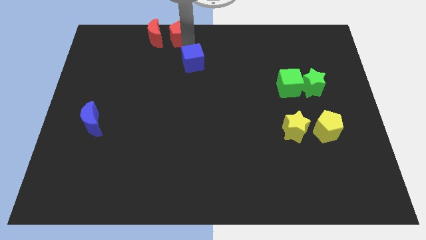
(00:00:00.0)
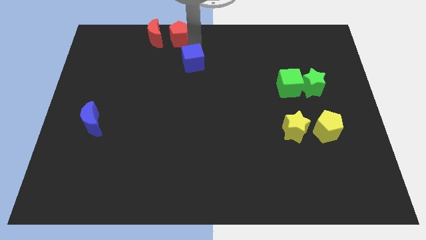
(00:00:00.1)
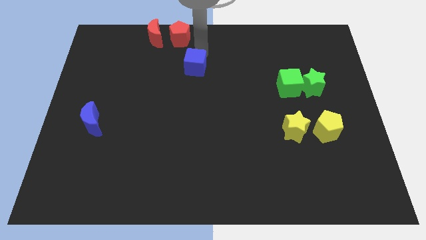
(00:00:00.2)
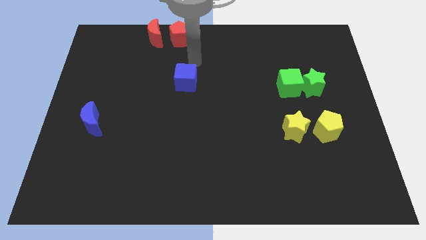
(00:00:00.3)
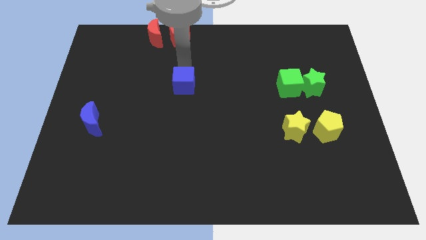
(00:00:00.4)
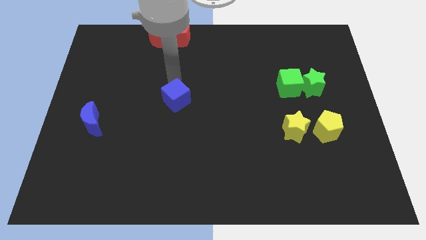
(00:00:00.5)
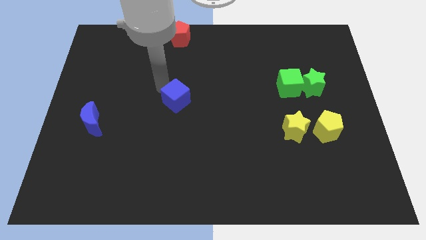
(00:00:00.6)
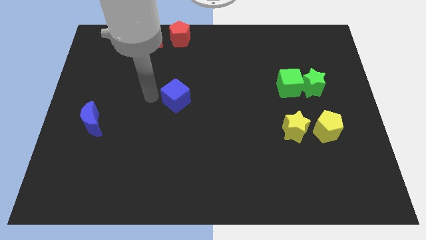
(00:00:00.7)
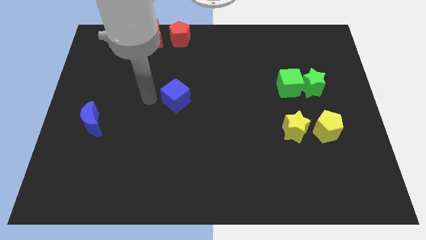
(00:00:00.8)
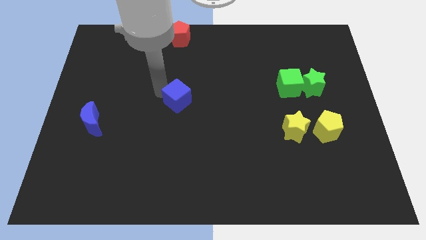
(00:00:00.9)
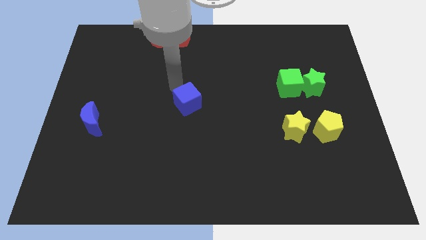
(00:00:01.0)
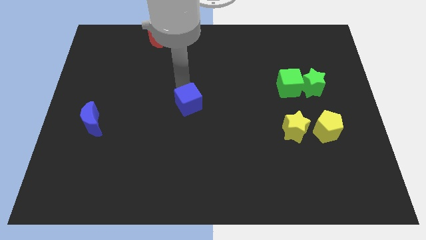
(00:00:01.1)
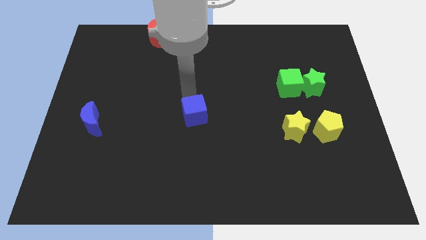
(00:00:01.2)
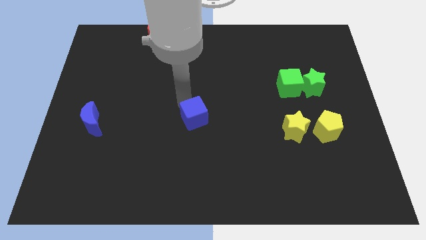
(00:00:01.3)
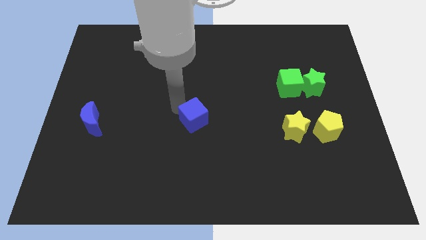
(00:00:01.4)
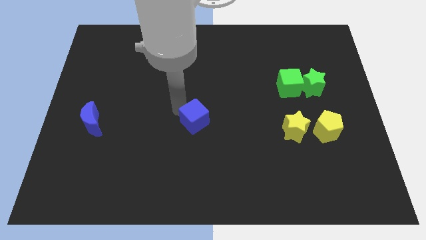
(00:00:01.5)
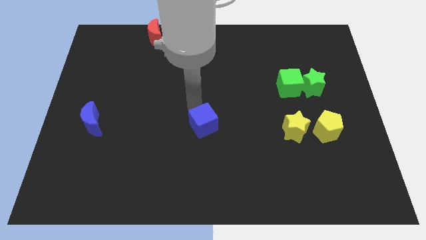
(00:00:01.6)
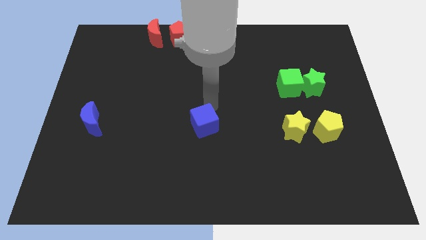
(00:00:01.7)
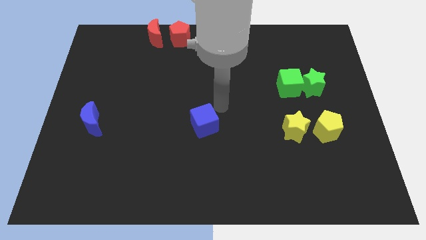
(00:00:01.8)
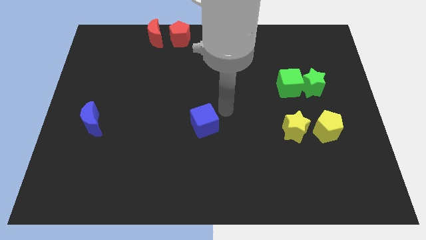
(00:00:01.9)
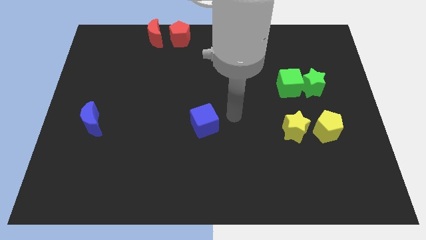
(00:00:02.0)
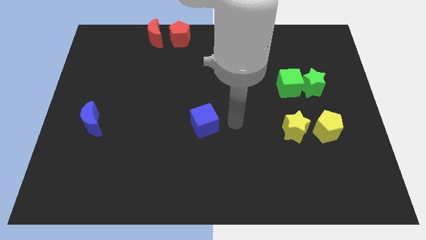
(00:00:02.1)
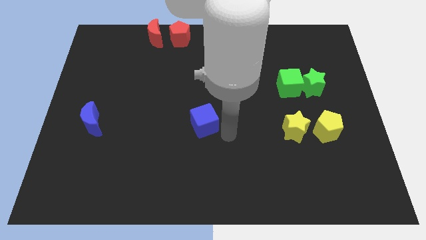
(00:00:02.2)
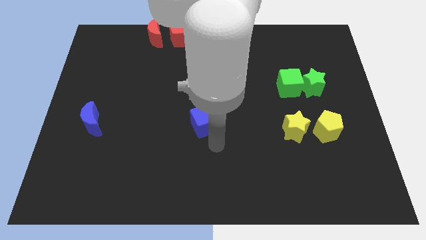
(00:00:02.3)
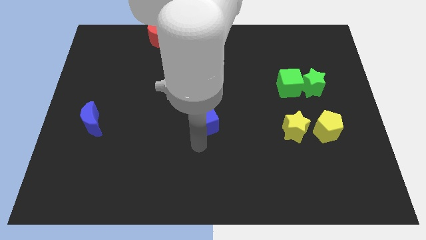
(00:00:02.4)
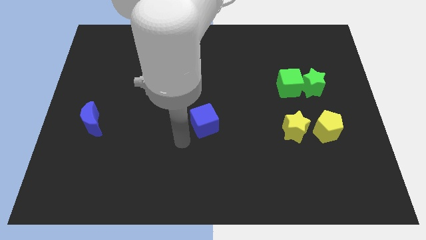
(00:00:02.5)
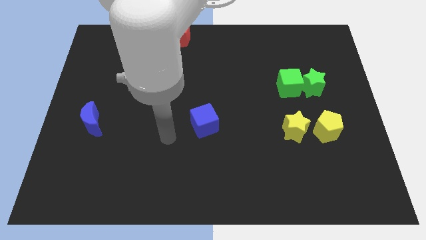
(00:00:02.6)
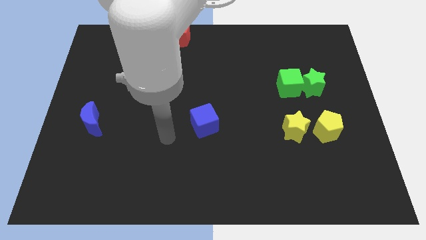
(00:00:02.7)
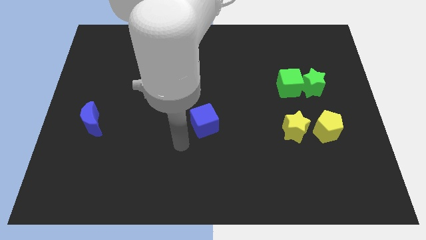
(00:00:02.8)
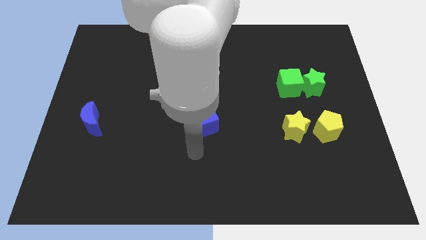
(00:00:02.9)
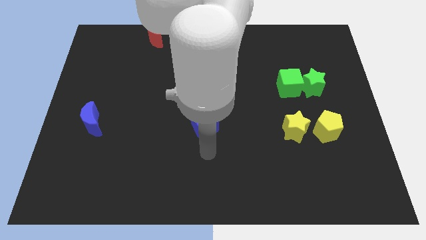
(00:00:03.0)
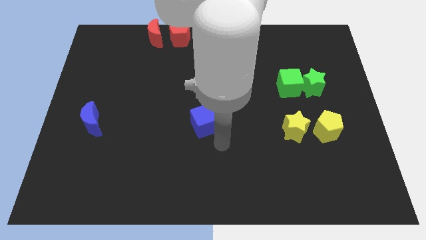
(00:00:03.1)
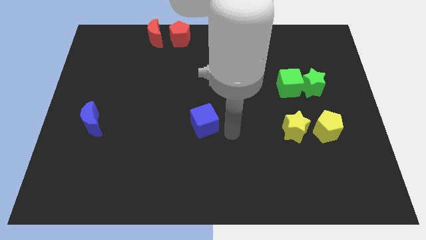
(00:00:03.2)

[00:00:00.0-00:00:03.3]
move the blue cube to the center of the board

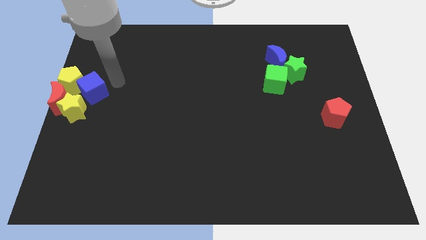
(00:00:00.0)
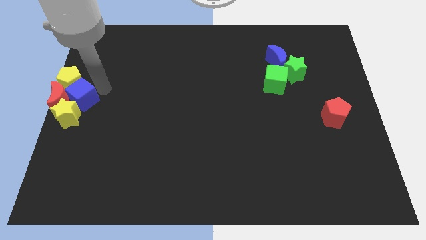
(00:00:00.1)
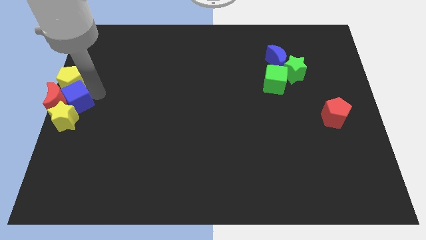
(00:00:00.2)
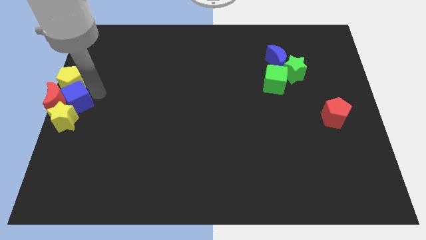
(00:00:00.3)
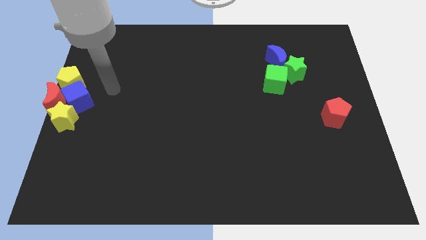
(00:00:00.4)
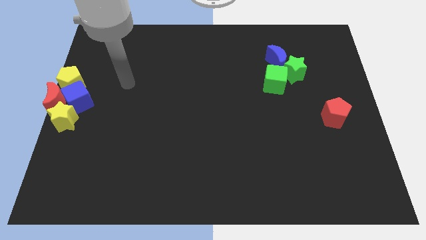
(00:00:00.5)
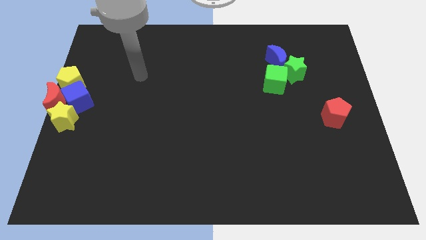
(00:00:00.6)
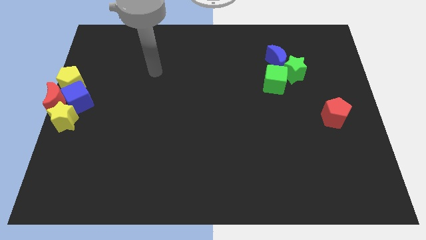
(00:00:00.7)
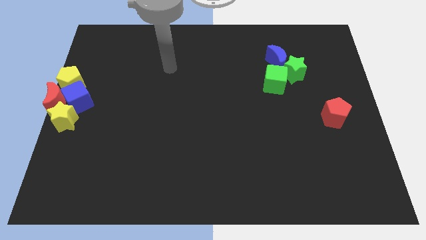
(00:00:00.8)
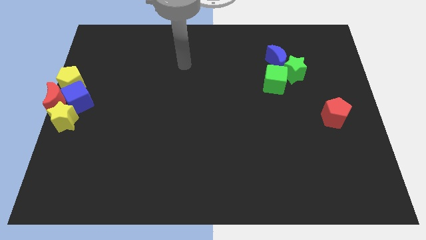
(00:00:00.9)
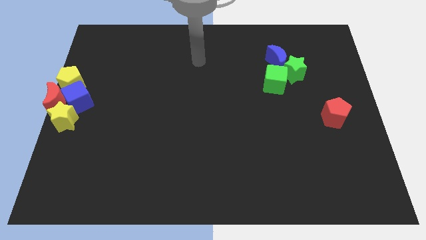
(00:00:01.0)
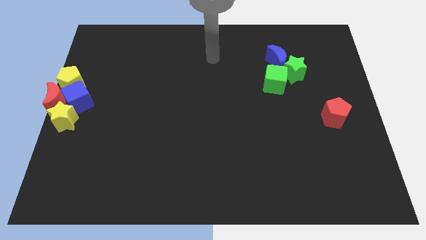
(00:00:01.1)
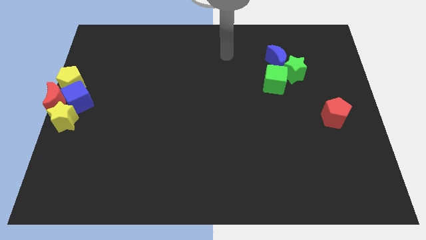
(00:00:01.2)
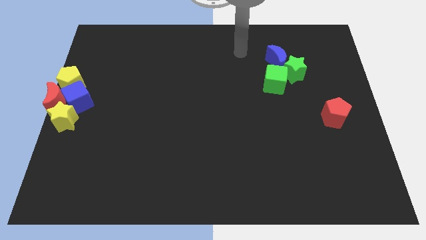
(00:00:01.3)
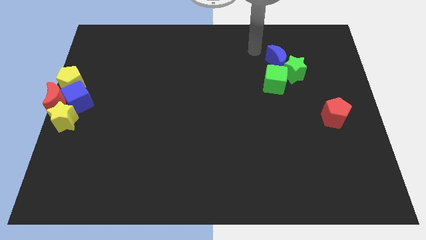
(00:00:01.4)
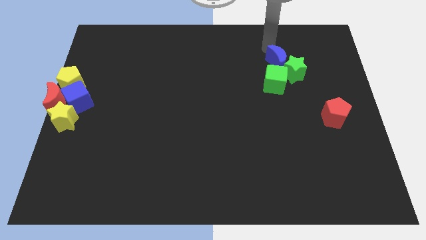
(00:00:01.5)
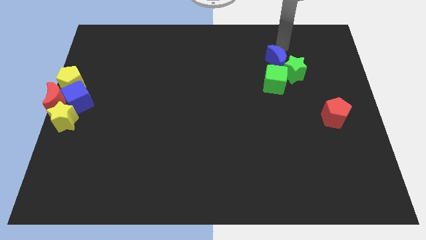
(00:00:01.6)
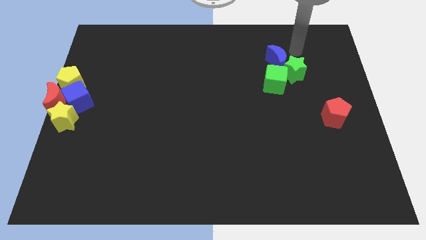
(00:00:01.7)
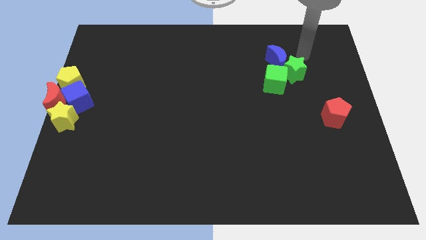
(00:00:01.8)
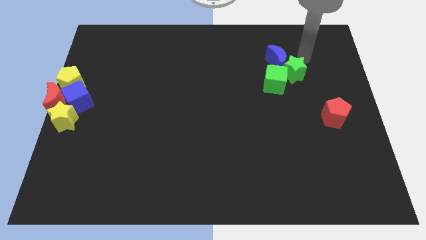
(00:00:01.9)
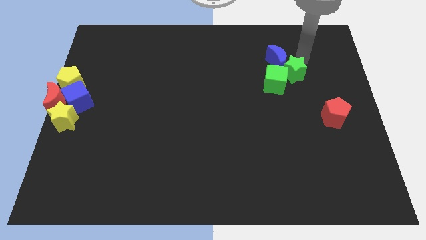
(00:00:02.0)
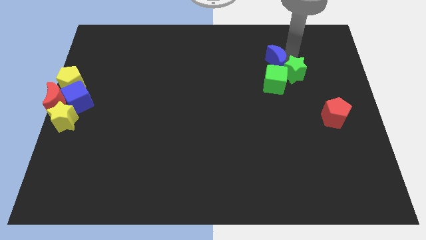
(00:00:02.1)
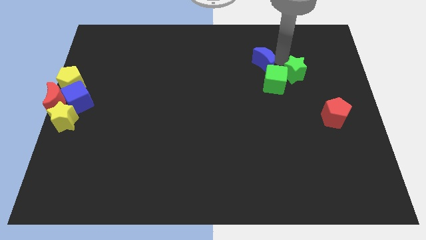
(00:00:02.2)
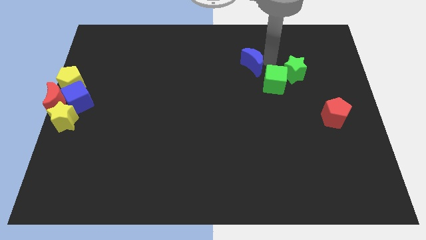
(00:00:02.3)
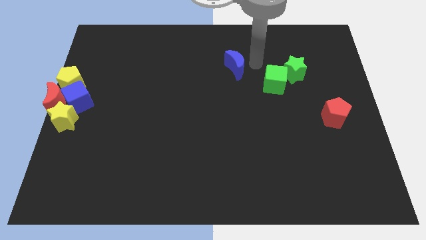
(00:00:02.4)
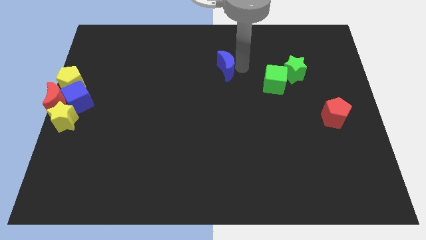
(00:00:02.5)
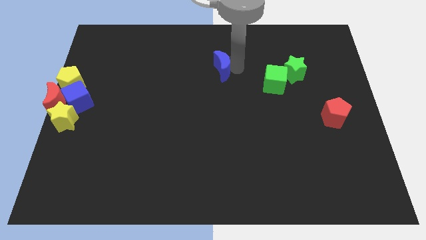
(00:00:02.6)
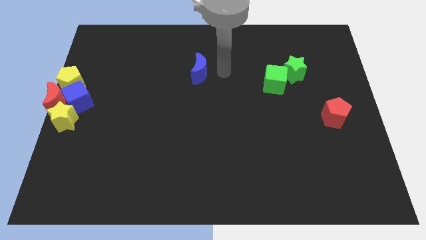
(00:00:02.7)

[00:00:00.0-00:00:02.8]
separate the blue crescent from the green blocks

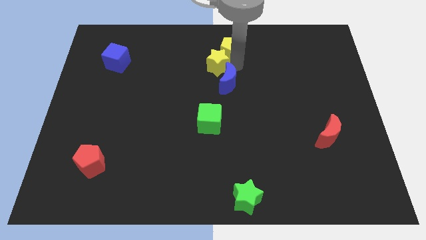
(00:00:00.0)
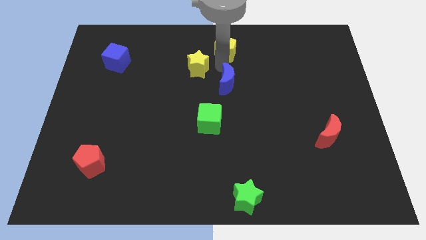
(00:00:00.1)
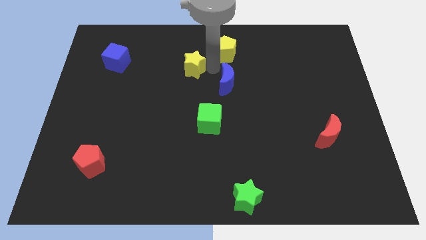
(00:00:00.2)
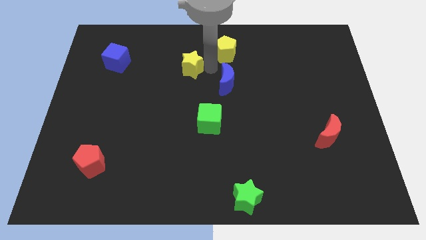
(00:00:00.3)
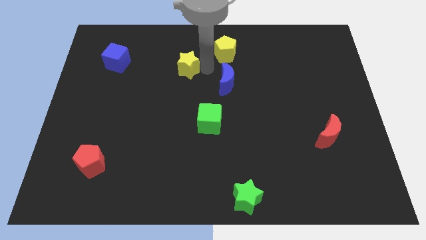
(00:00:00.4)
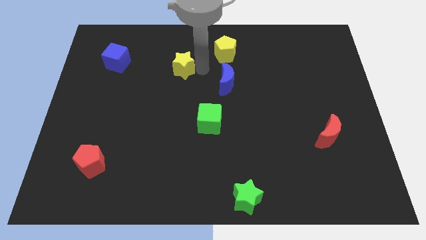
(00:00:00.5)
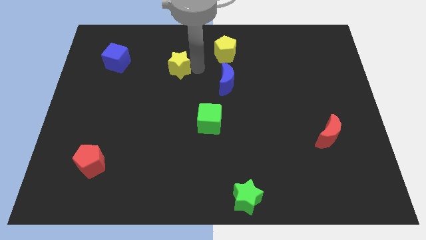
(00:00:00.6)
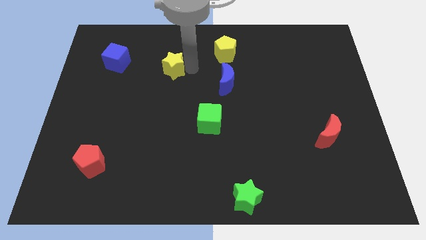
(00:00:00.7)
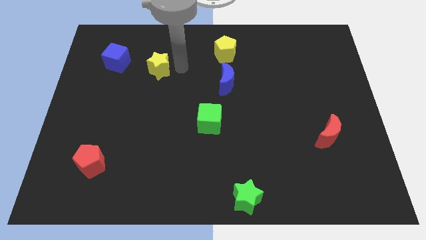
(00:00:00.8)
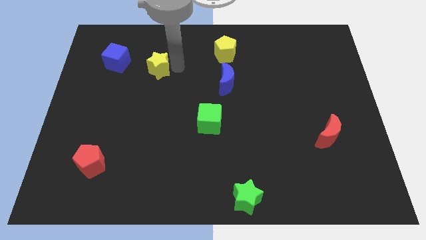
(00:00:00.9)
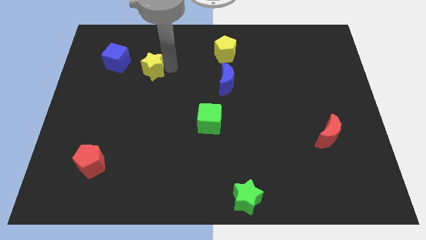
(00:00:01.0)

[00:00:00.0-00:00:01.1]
separate the yellow star from yellow pentagon and blue moon

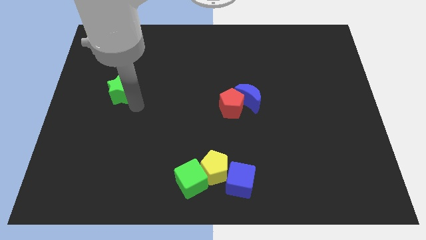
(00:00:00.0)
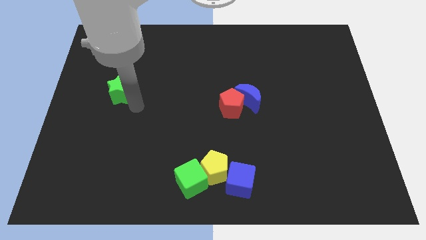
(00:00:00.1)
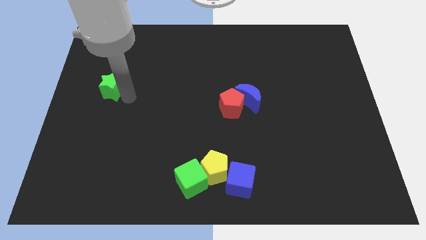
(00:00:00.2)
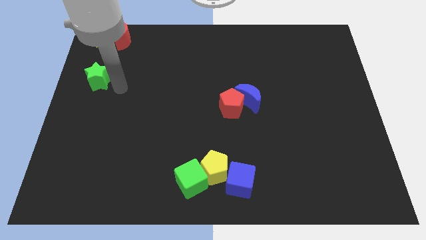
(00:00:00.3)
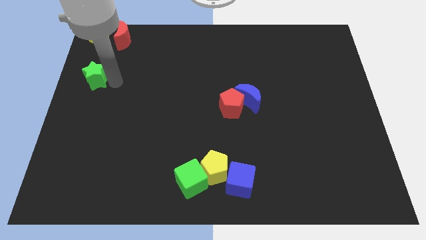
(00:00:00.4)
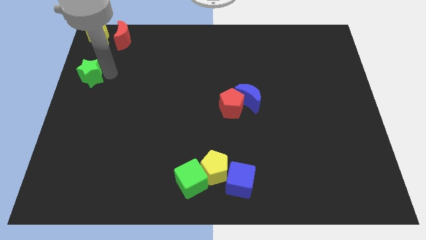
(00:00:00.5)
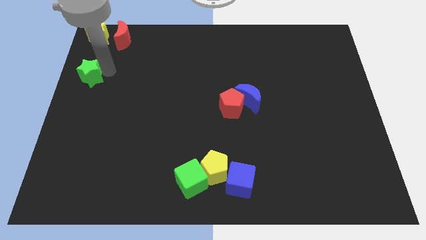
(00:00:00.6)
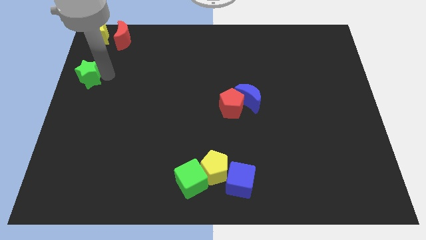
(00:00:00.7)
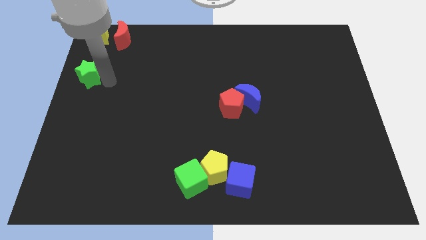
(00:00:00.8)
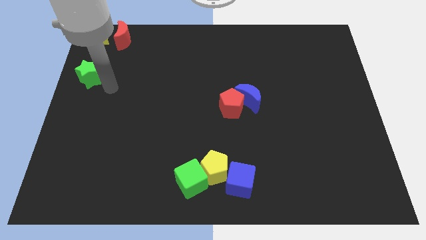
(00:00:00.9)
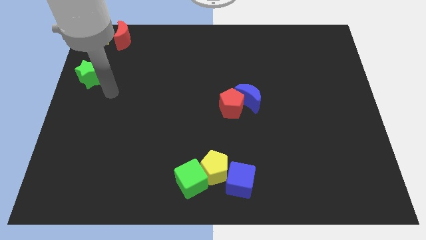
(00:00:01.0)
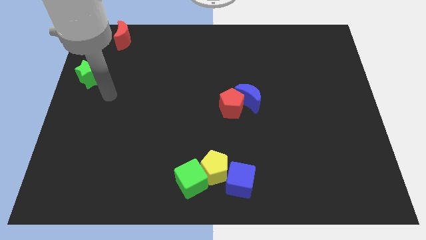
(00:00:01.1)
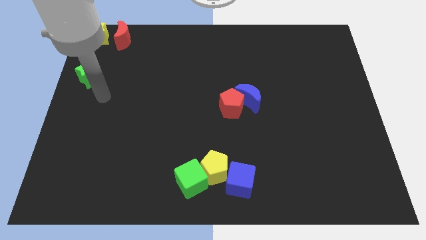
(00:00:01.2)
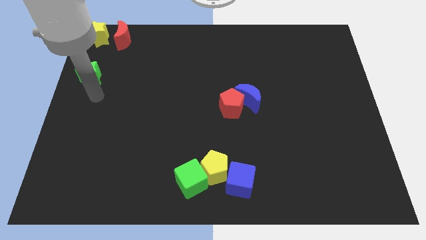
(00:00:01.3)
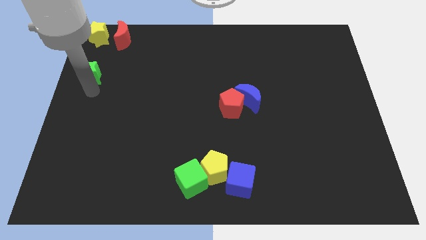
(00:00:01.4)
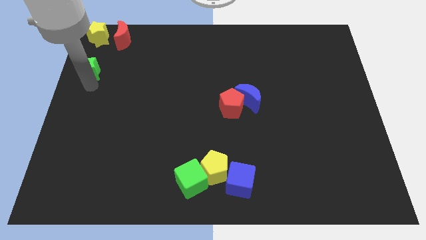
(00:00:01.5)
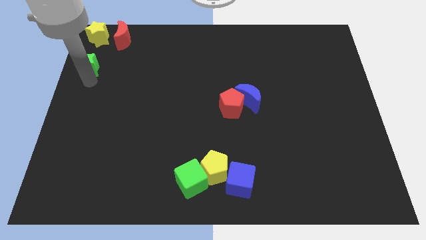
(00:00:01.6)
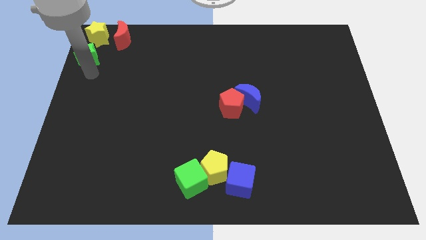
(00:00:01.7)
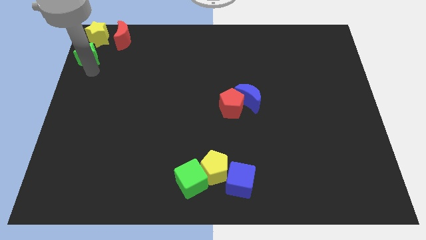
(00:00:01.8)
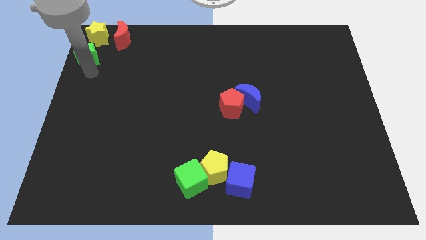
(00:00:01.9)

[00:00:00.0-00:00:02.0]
move the green star towards the yellow pentagon
